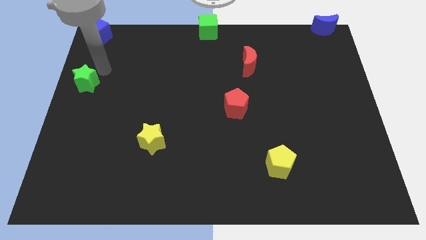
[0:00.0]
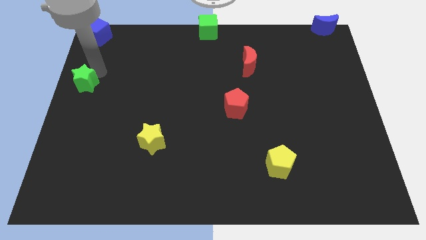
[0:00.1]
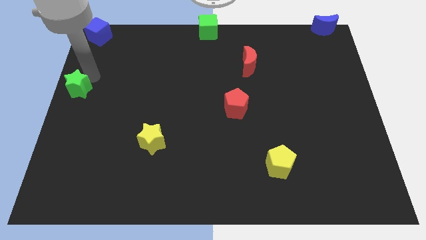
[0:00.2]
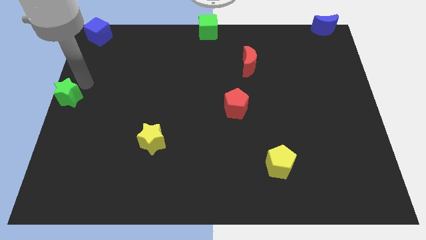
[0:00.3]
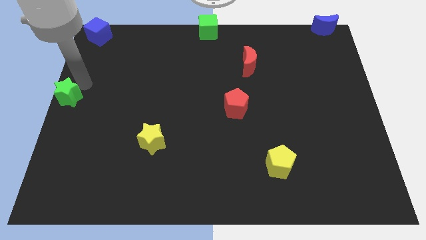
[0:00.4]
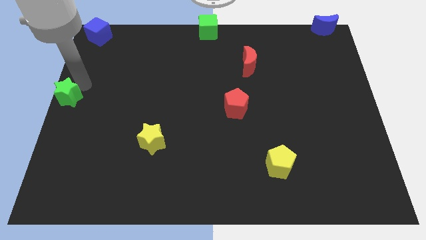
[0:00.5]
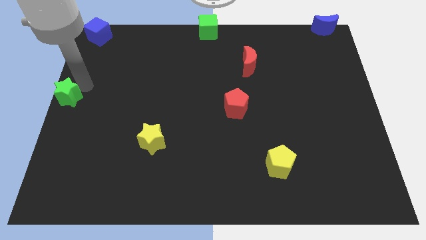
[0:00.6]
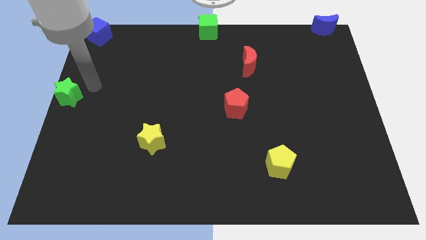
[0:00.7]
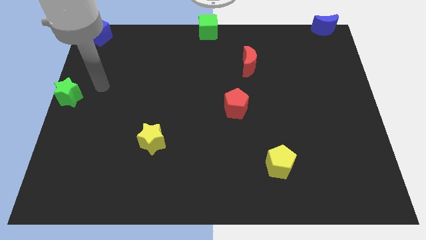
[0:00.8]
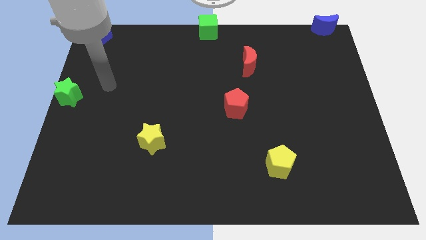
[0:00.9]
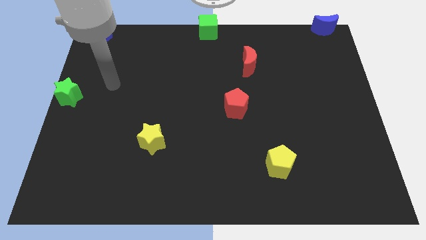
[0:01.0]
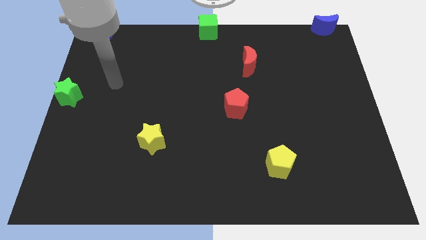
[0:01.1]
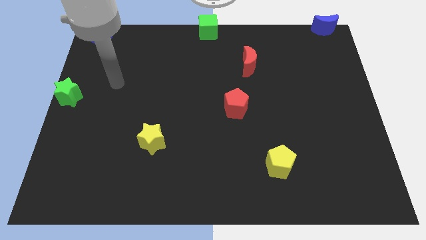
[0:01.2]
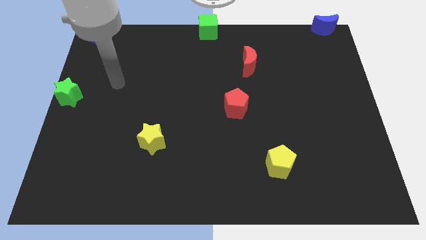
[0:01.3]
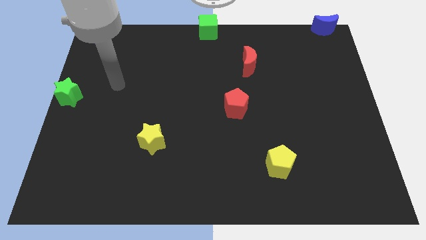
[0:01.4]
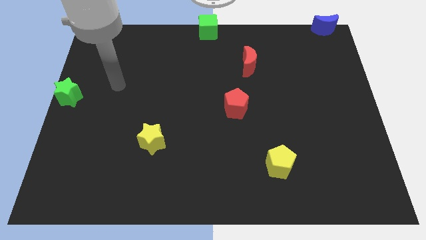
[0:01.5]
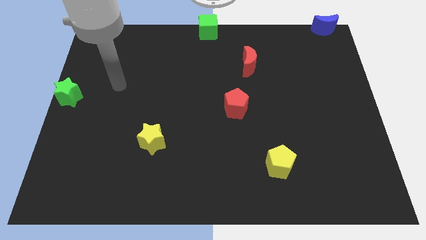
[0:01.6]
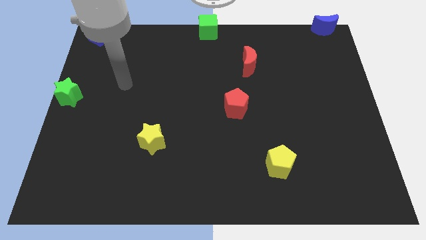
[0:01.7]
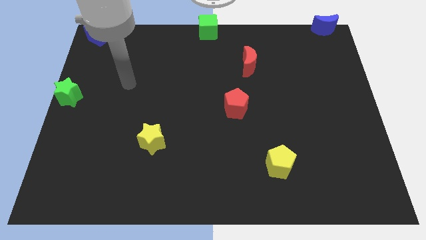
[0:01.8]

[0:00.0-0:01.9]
push the green star to the center left of the board

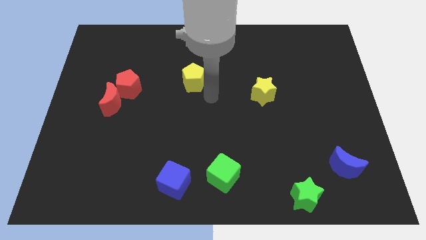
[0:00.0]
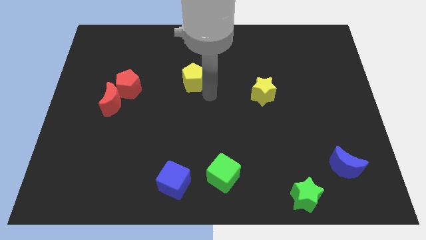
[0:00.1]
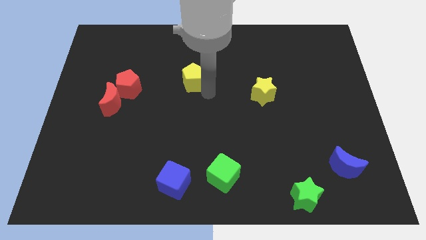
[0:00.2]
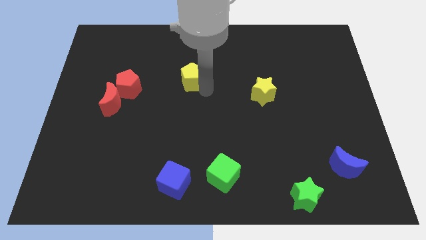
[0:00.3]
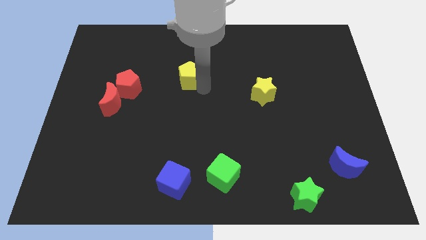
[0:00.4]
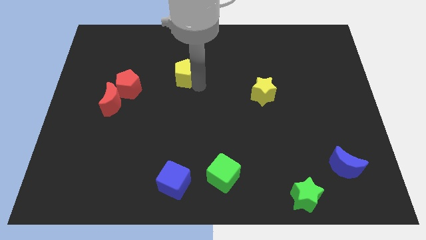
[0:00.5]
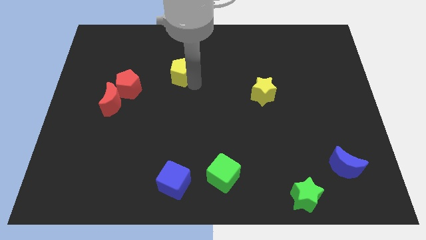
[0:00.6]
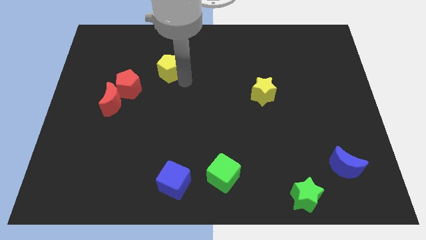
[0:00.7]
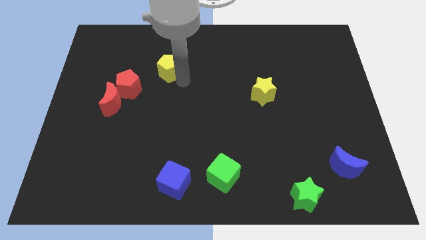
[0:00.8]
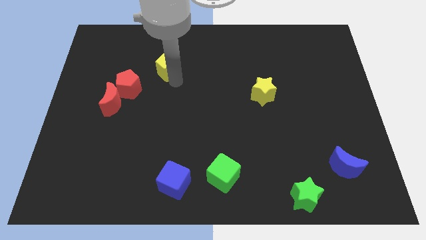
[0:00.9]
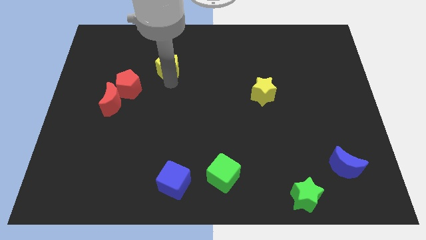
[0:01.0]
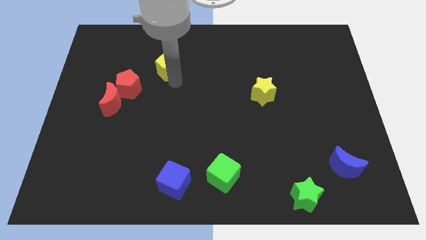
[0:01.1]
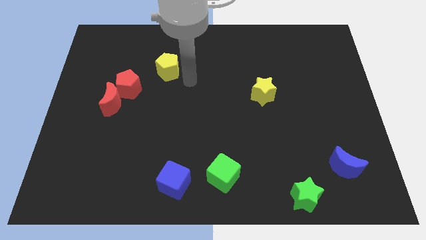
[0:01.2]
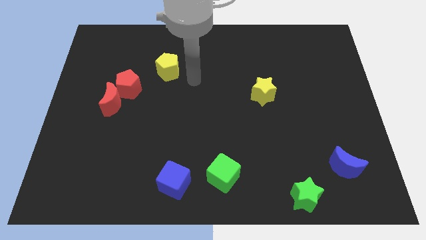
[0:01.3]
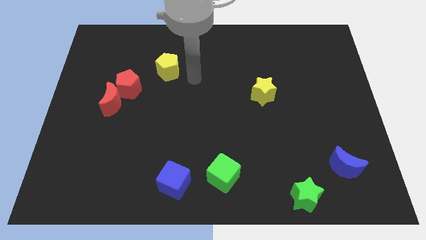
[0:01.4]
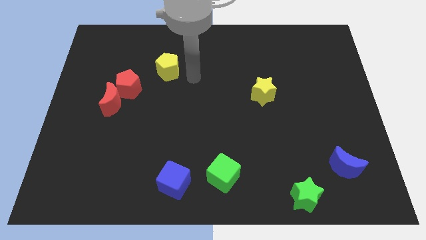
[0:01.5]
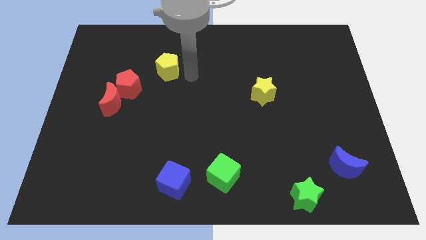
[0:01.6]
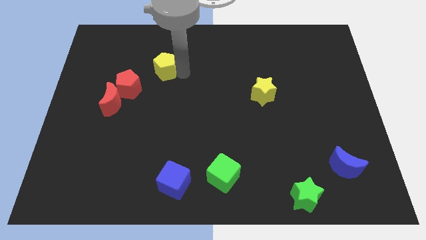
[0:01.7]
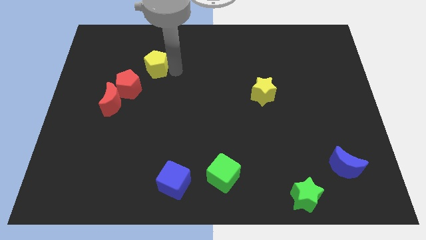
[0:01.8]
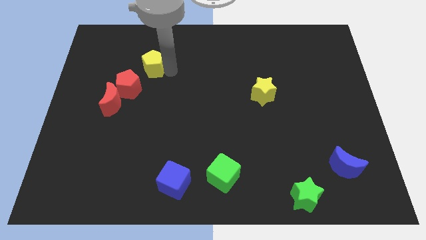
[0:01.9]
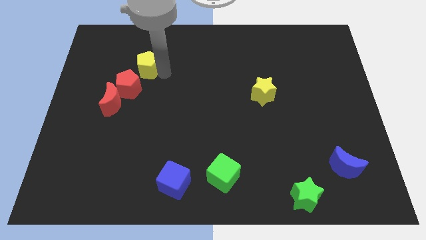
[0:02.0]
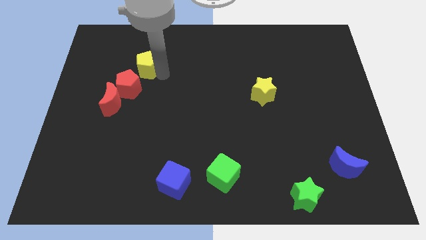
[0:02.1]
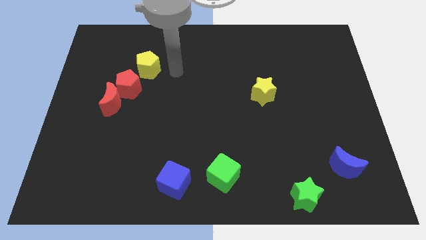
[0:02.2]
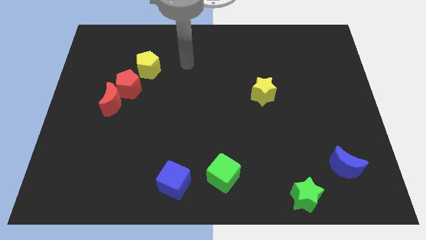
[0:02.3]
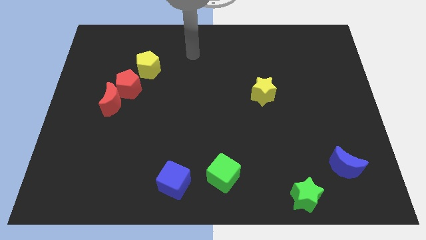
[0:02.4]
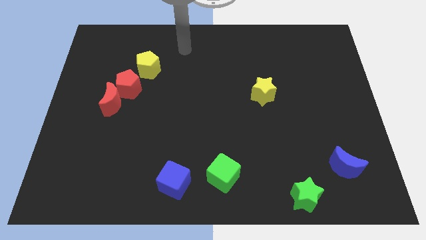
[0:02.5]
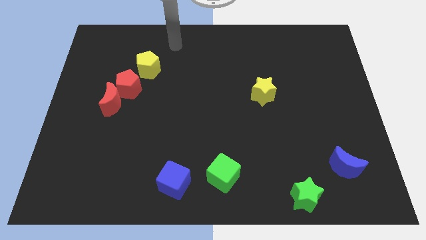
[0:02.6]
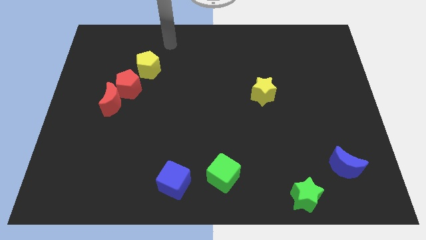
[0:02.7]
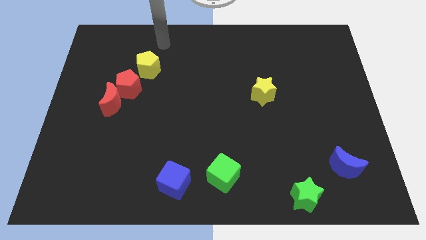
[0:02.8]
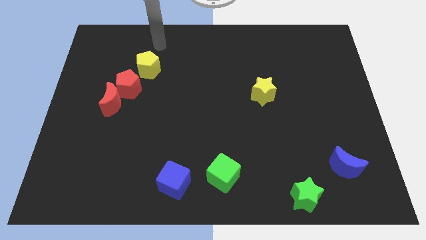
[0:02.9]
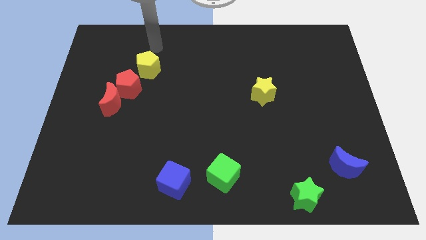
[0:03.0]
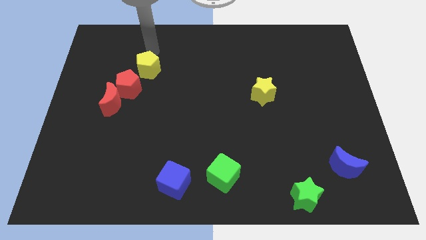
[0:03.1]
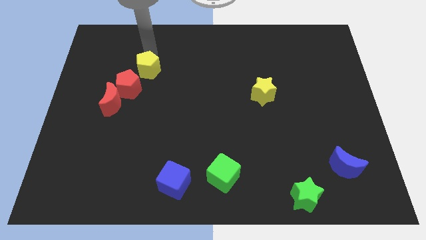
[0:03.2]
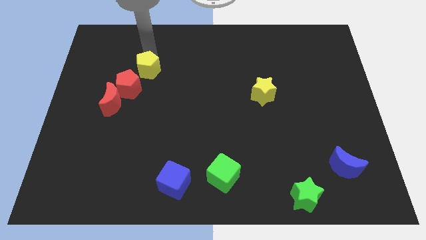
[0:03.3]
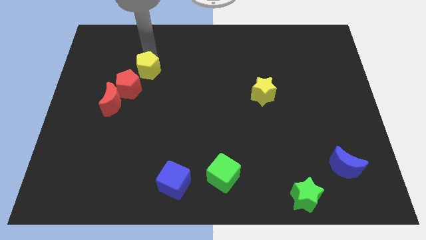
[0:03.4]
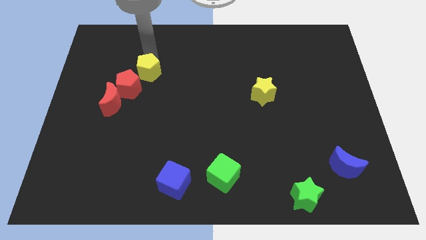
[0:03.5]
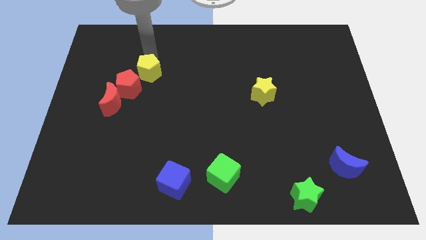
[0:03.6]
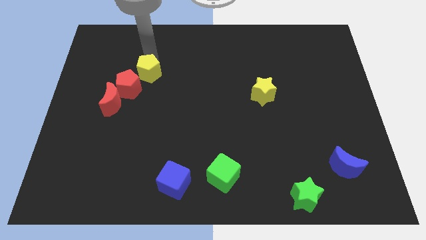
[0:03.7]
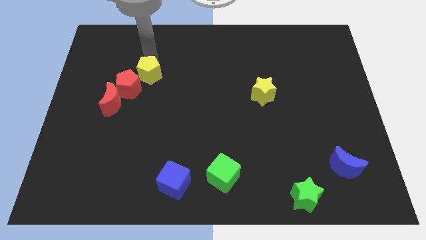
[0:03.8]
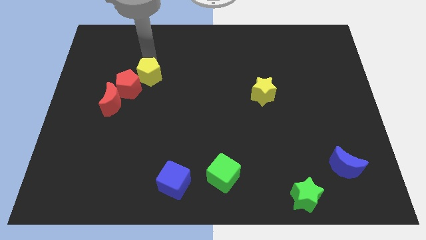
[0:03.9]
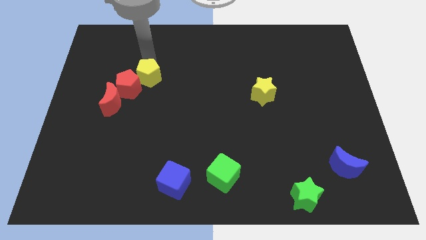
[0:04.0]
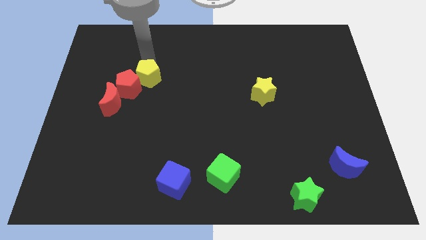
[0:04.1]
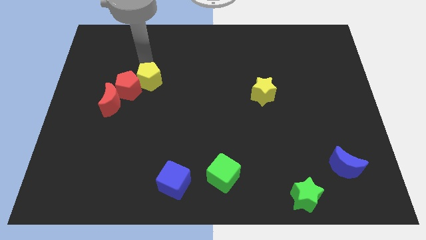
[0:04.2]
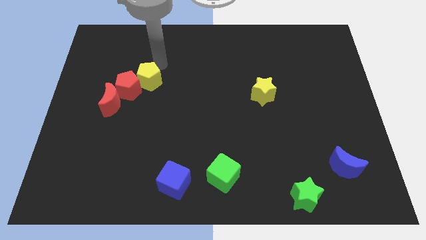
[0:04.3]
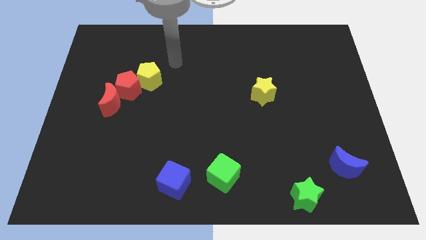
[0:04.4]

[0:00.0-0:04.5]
move the yellow pentagon into the top right of the red pentagon

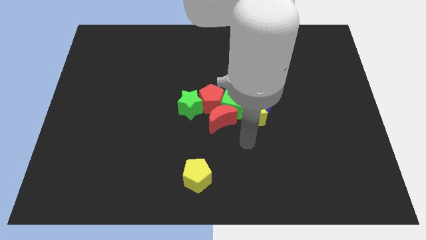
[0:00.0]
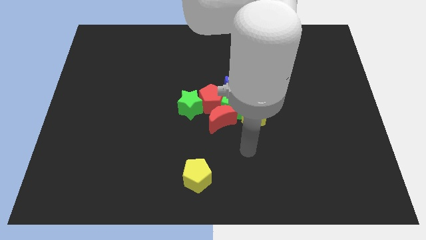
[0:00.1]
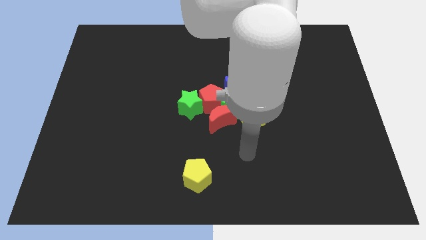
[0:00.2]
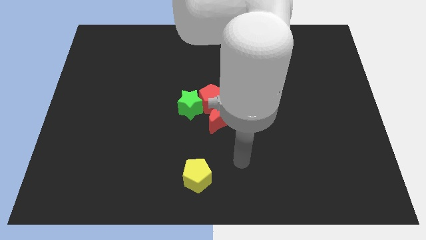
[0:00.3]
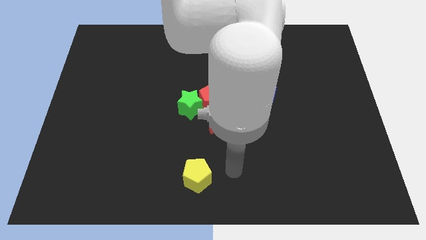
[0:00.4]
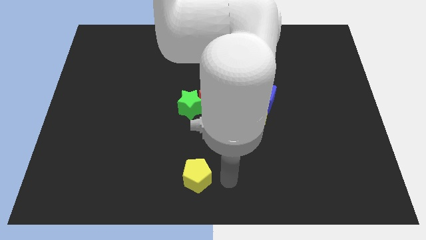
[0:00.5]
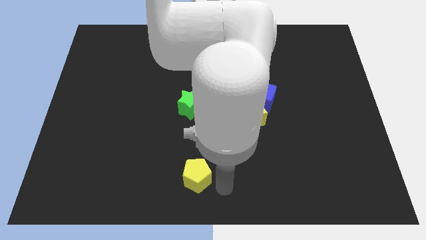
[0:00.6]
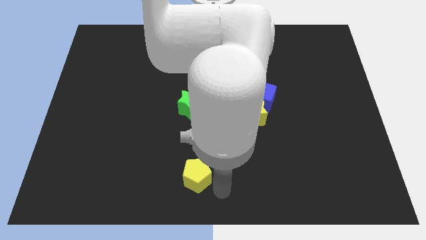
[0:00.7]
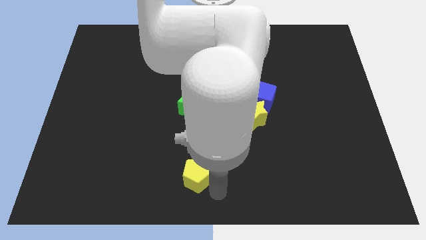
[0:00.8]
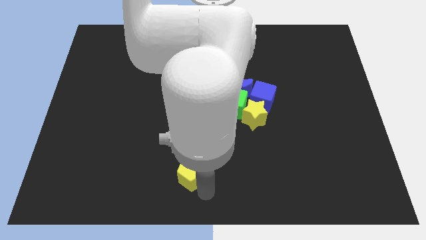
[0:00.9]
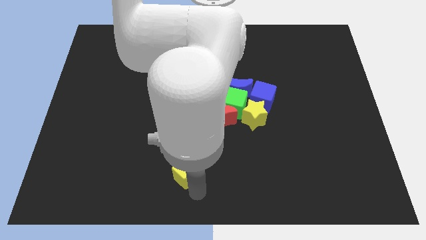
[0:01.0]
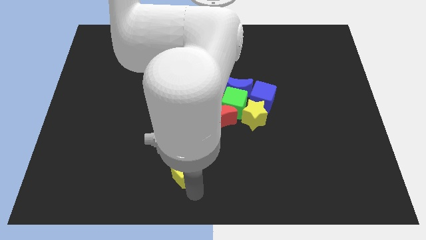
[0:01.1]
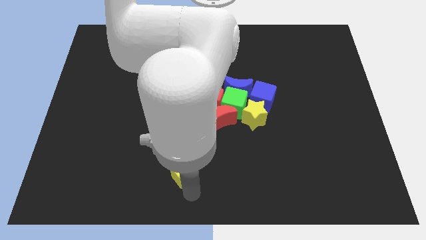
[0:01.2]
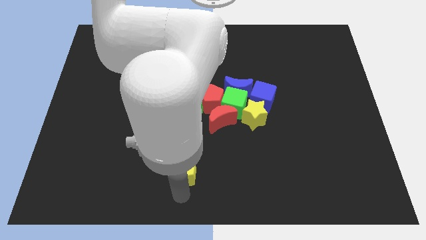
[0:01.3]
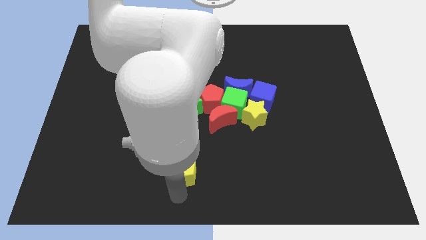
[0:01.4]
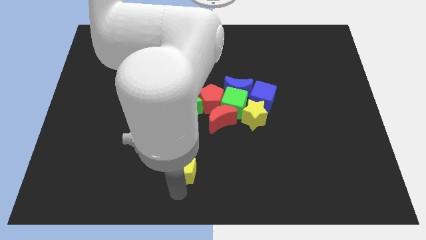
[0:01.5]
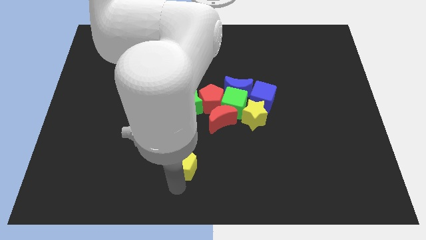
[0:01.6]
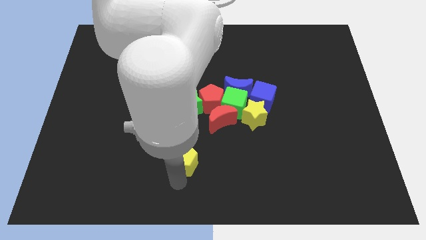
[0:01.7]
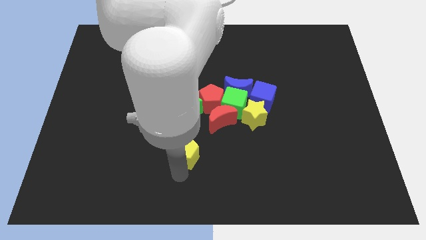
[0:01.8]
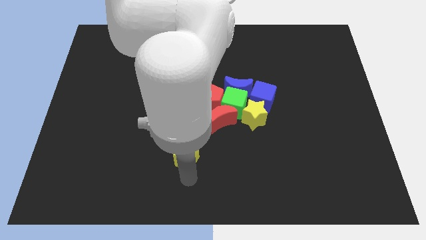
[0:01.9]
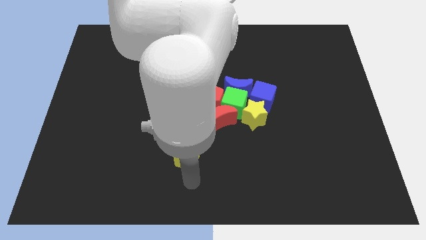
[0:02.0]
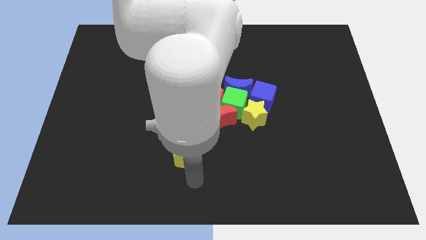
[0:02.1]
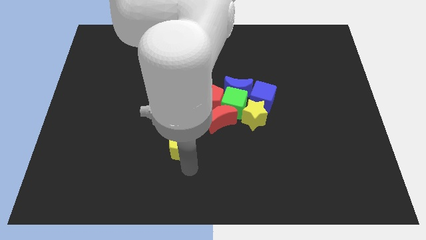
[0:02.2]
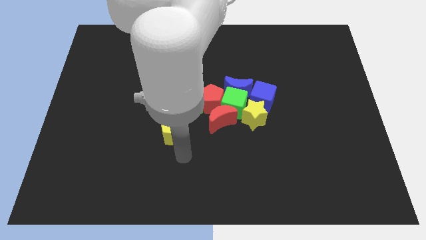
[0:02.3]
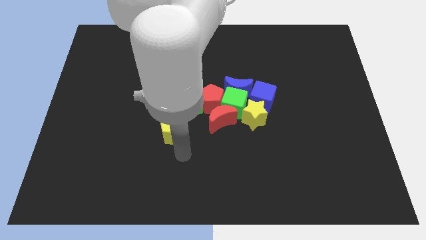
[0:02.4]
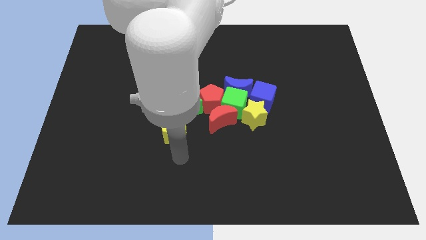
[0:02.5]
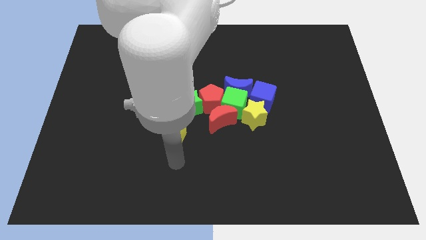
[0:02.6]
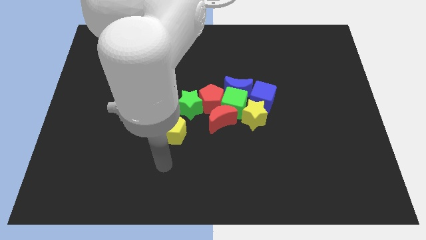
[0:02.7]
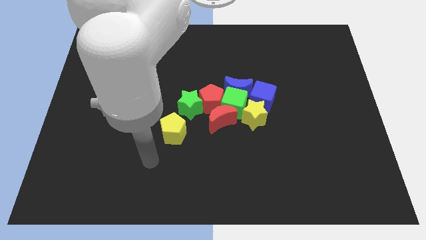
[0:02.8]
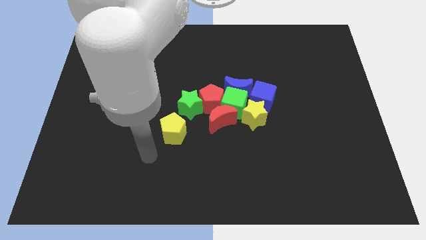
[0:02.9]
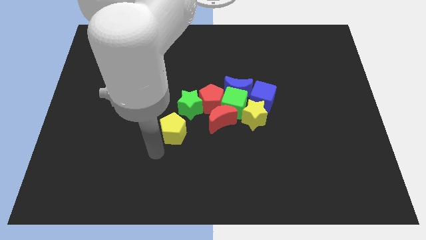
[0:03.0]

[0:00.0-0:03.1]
slide the yellow pentagon towards the green star
